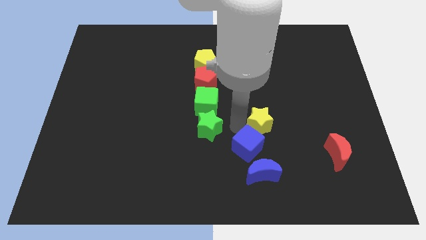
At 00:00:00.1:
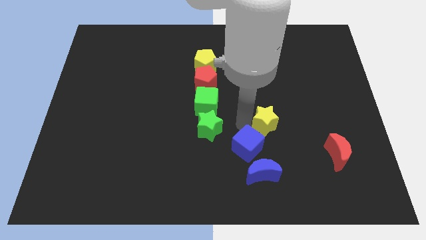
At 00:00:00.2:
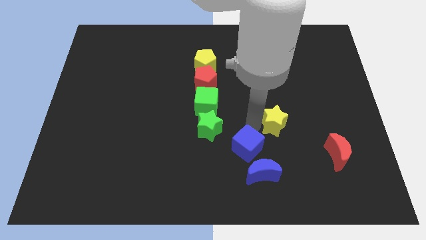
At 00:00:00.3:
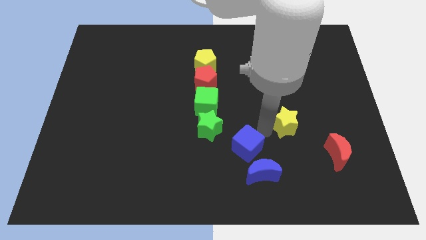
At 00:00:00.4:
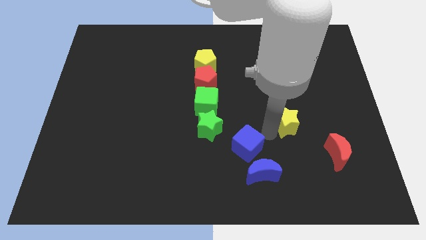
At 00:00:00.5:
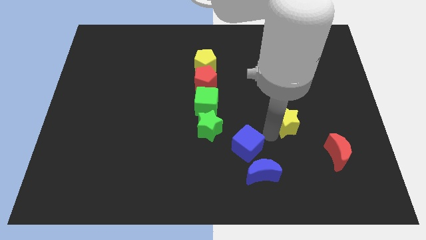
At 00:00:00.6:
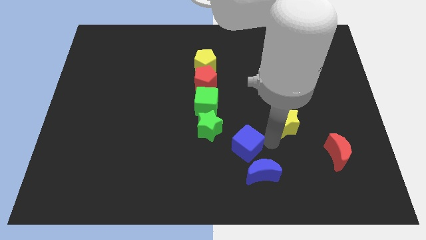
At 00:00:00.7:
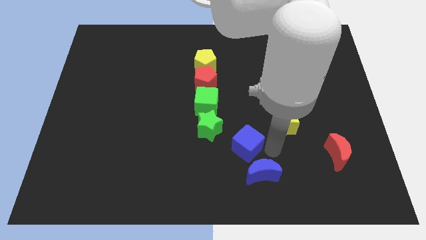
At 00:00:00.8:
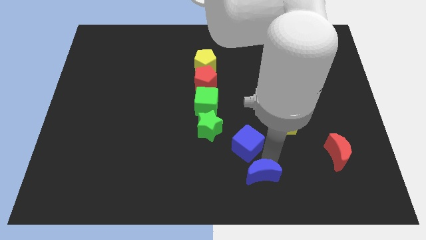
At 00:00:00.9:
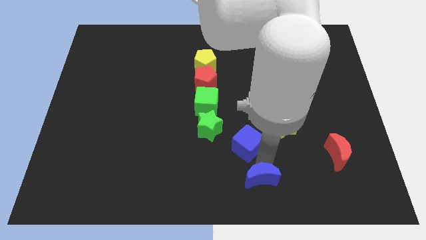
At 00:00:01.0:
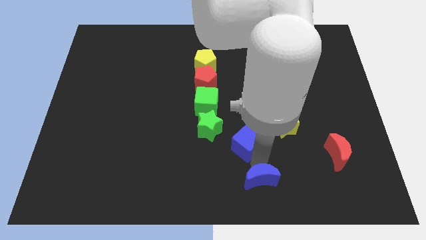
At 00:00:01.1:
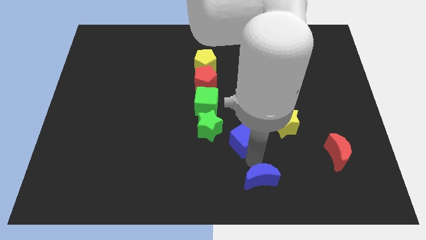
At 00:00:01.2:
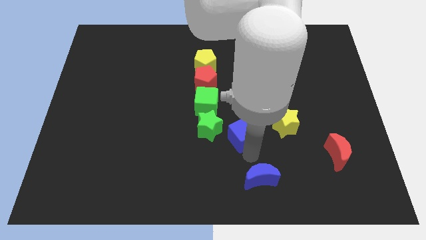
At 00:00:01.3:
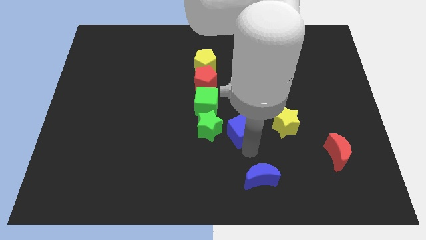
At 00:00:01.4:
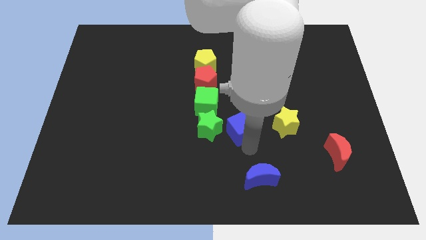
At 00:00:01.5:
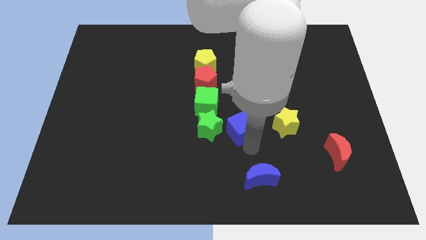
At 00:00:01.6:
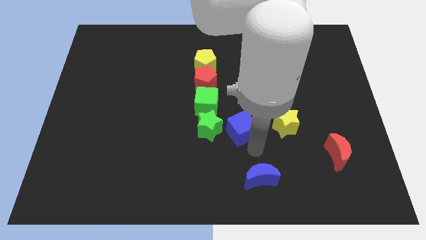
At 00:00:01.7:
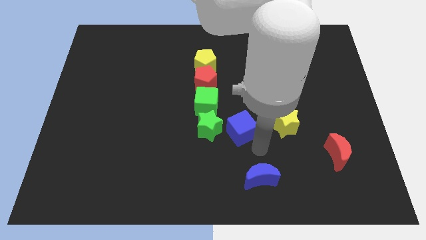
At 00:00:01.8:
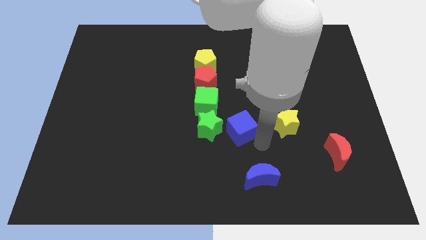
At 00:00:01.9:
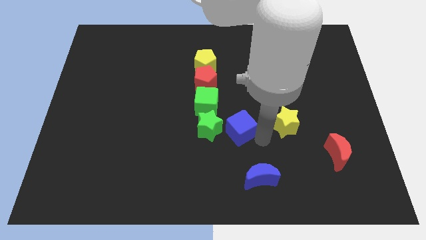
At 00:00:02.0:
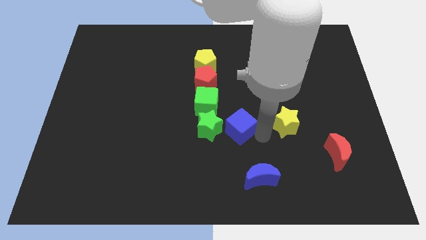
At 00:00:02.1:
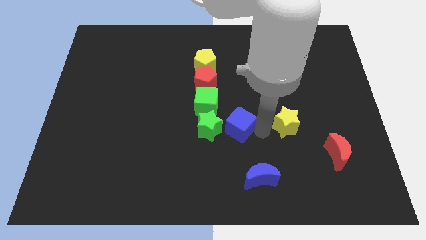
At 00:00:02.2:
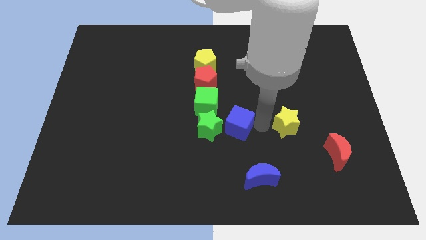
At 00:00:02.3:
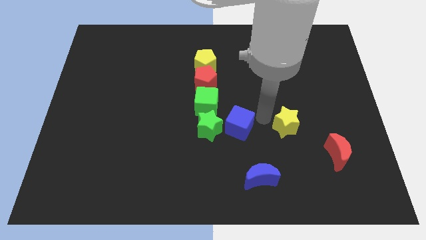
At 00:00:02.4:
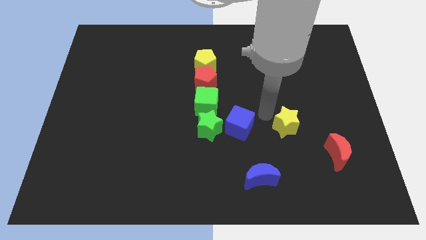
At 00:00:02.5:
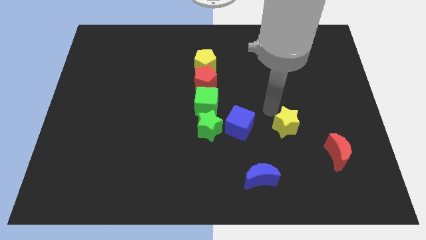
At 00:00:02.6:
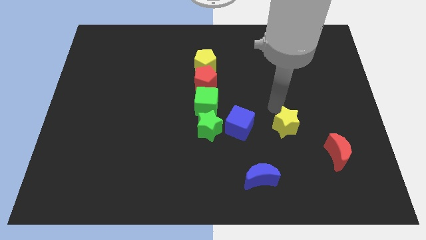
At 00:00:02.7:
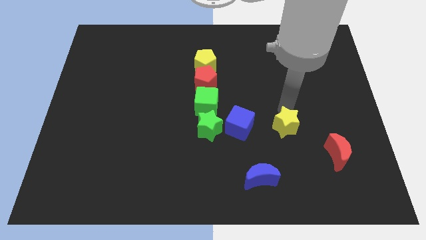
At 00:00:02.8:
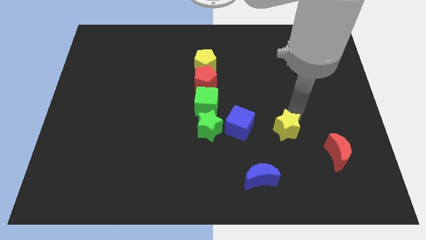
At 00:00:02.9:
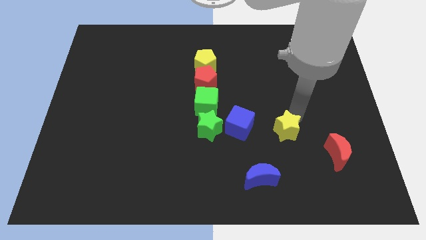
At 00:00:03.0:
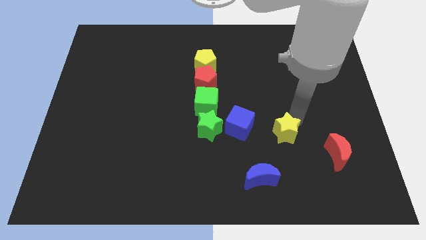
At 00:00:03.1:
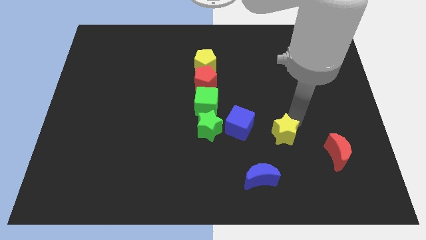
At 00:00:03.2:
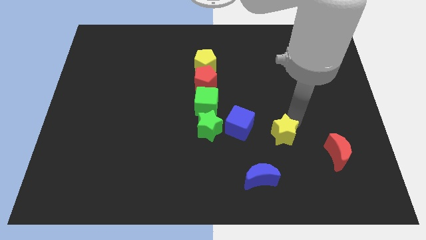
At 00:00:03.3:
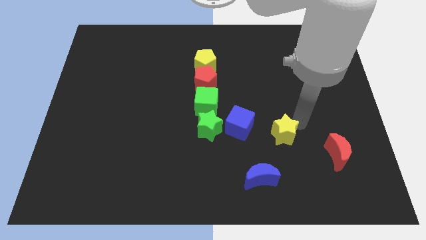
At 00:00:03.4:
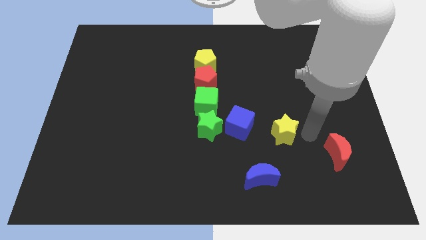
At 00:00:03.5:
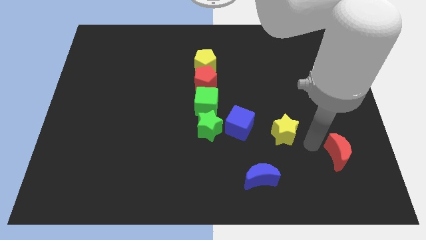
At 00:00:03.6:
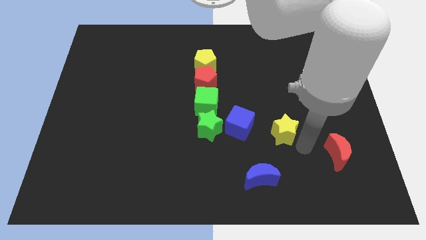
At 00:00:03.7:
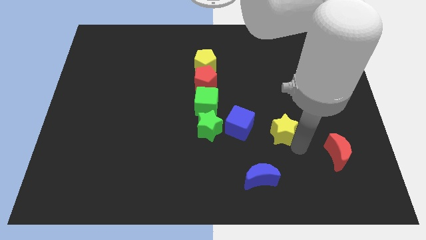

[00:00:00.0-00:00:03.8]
form a triangle out of blue blocks and the yellow star

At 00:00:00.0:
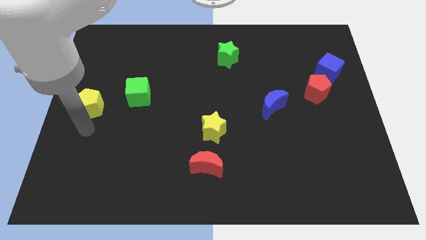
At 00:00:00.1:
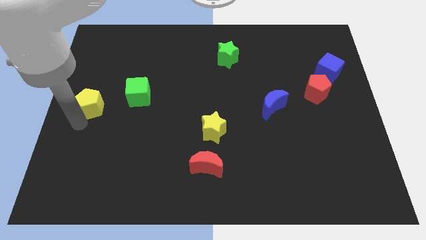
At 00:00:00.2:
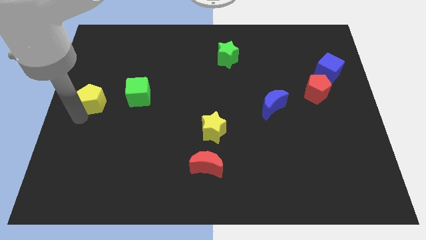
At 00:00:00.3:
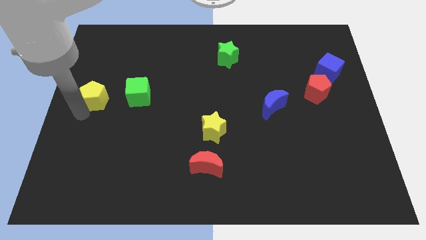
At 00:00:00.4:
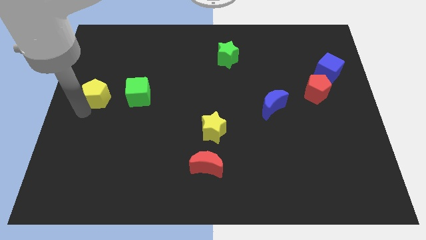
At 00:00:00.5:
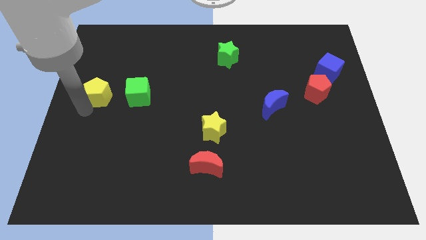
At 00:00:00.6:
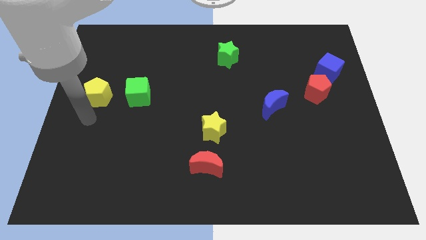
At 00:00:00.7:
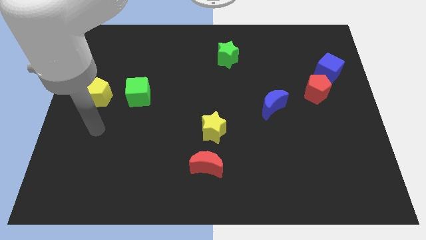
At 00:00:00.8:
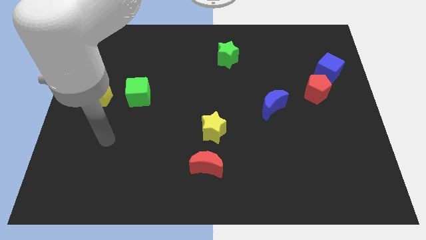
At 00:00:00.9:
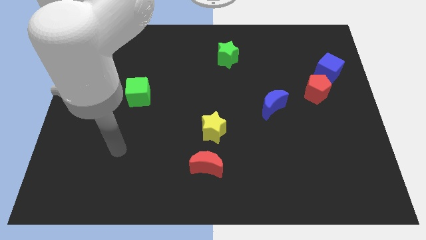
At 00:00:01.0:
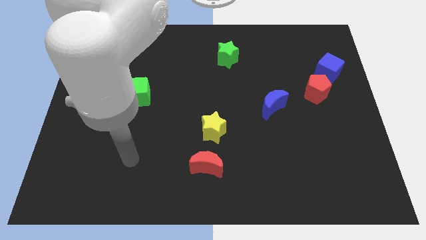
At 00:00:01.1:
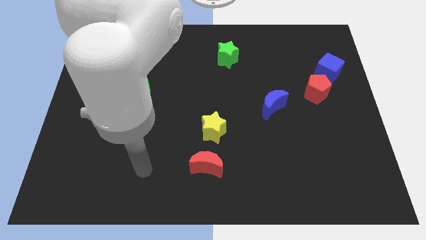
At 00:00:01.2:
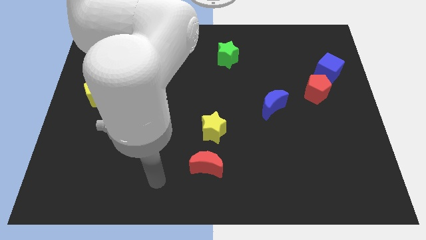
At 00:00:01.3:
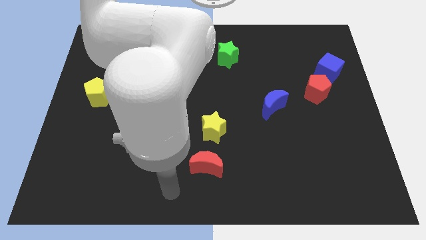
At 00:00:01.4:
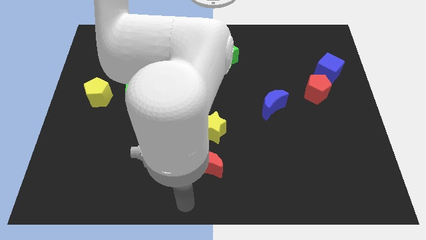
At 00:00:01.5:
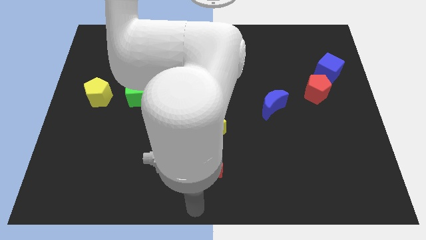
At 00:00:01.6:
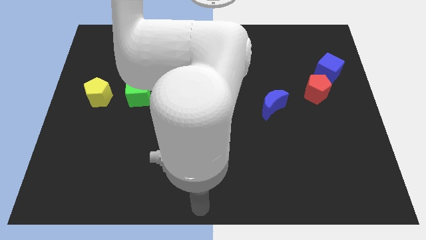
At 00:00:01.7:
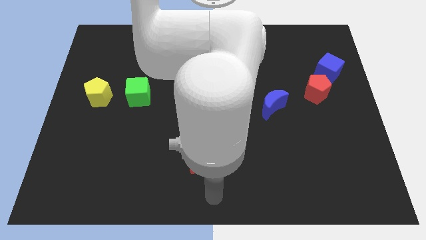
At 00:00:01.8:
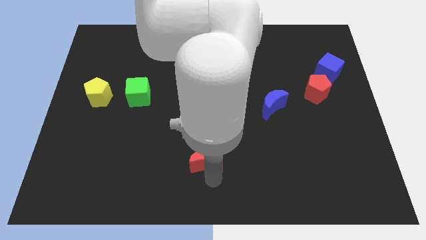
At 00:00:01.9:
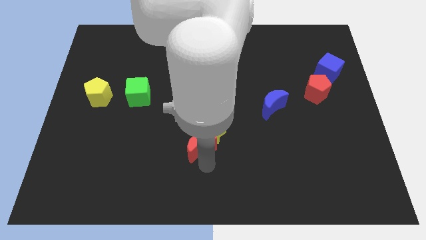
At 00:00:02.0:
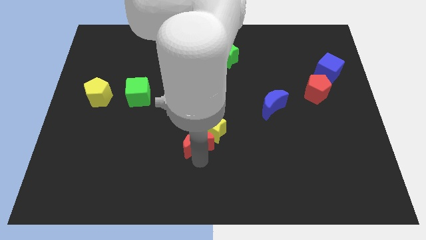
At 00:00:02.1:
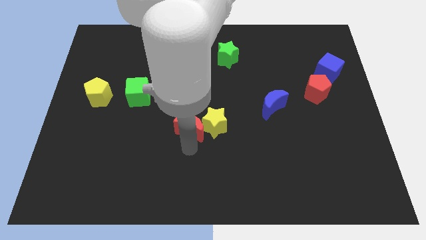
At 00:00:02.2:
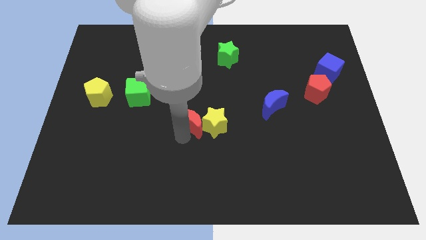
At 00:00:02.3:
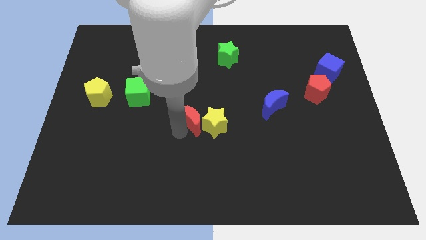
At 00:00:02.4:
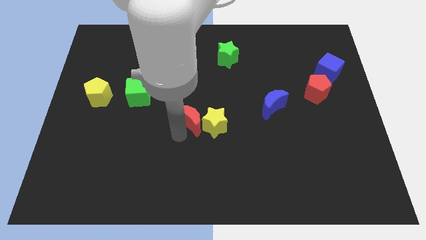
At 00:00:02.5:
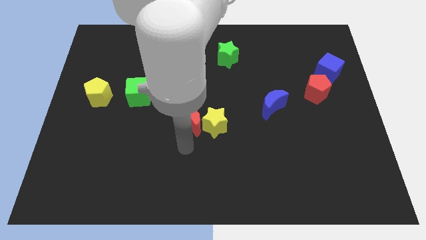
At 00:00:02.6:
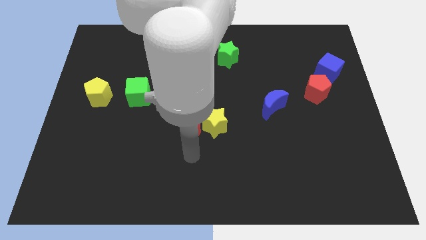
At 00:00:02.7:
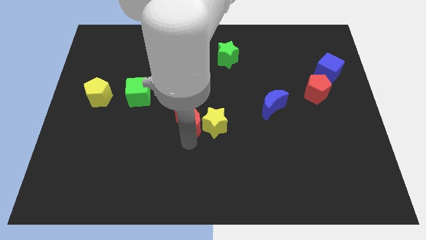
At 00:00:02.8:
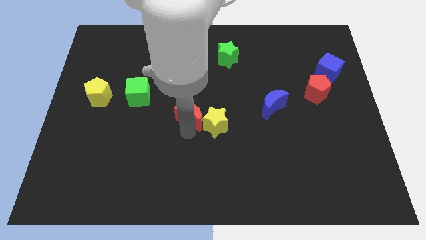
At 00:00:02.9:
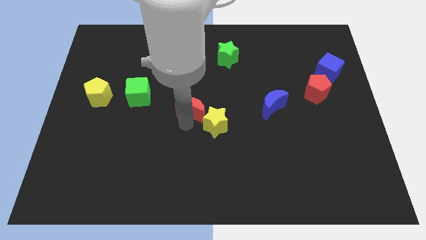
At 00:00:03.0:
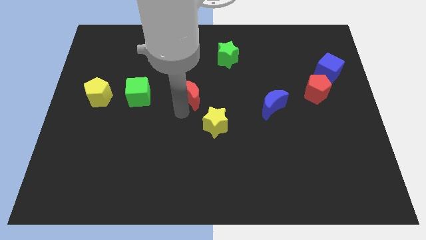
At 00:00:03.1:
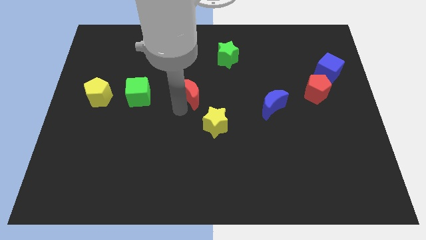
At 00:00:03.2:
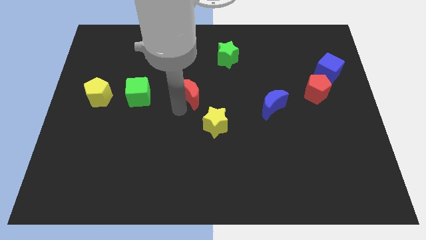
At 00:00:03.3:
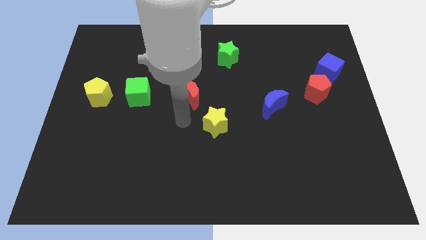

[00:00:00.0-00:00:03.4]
push the red moon slightly upwards

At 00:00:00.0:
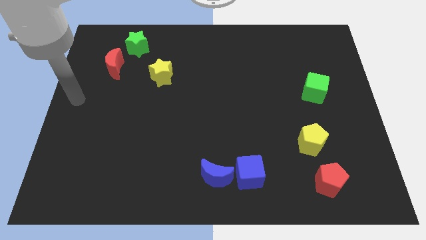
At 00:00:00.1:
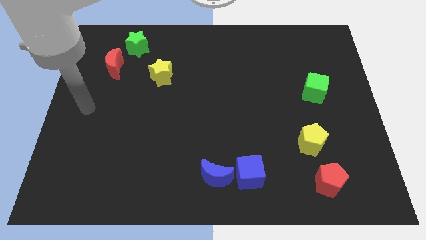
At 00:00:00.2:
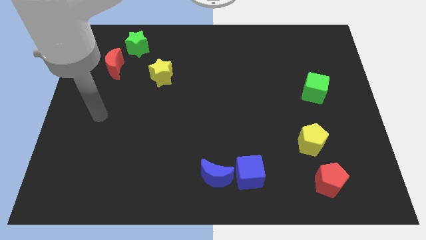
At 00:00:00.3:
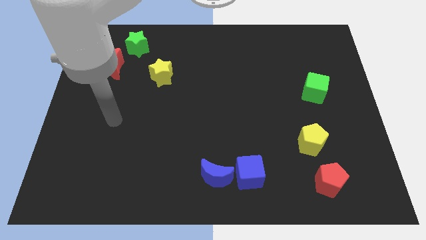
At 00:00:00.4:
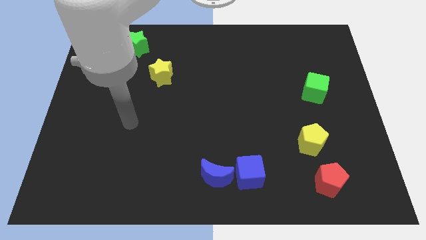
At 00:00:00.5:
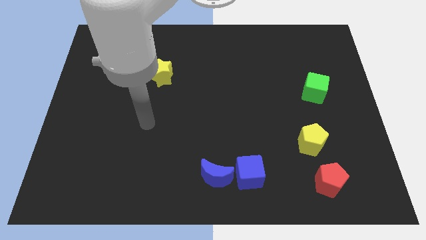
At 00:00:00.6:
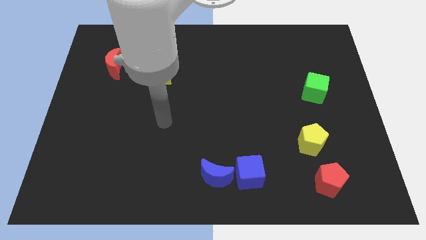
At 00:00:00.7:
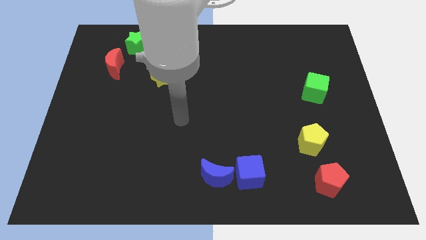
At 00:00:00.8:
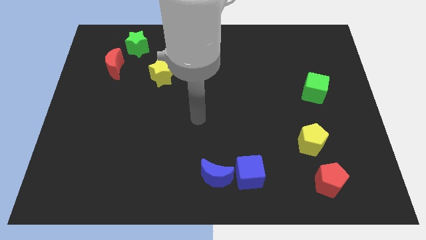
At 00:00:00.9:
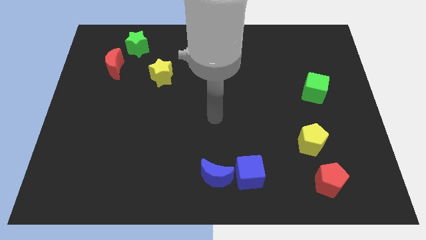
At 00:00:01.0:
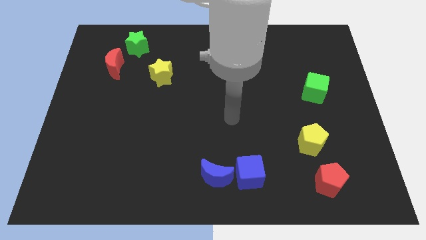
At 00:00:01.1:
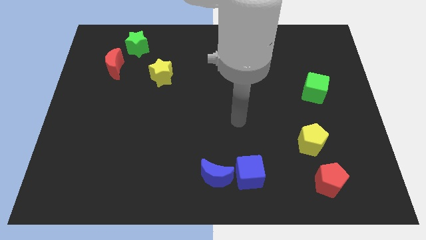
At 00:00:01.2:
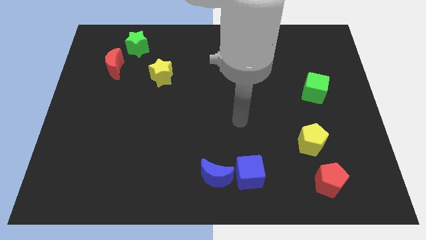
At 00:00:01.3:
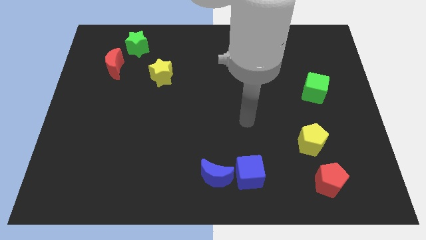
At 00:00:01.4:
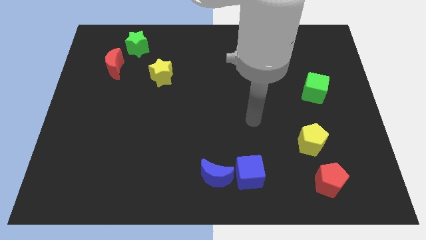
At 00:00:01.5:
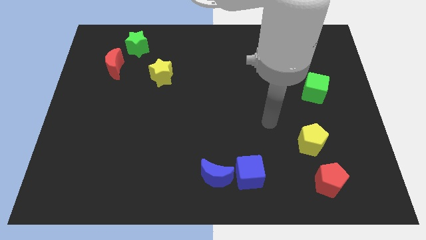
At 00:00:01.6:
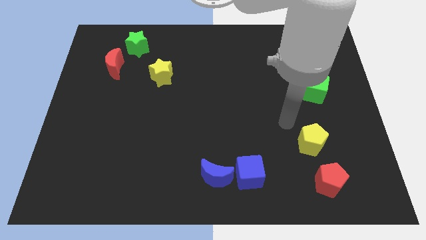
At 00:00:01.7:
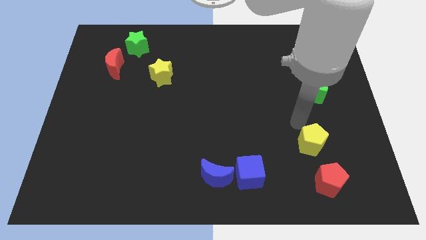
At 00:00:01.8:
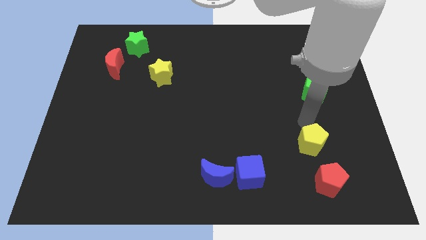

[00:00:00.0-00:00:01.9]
move the arm to the yellow pentagon
